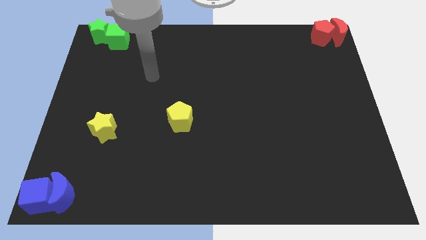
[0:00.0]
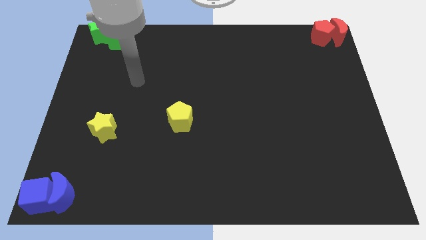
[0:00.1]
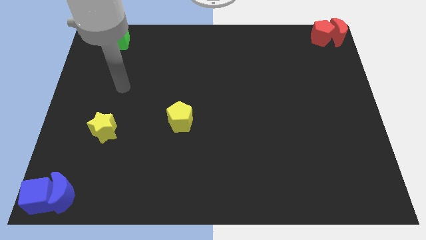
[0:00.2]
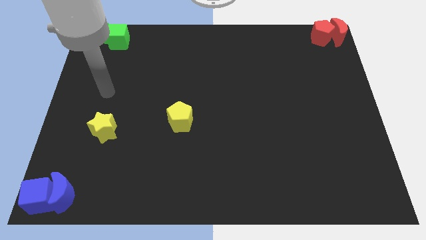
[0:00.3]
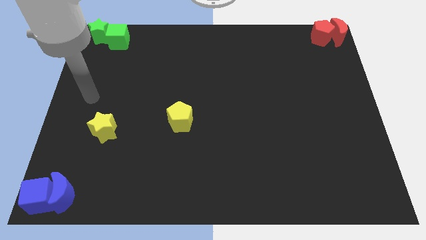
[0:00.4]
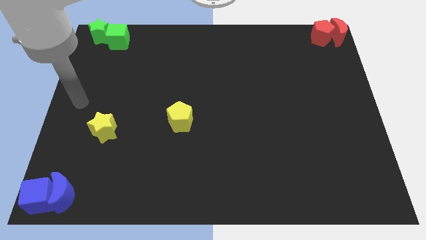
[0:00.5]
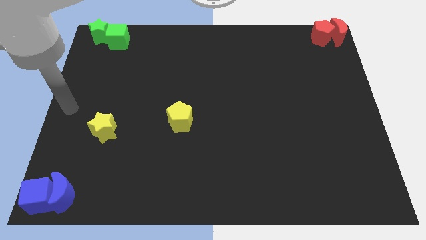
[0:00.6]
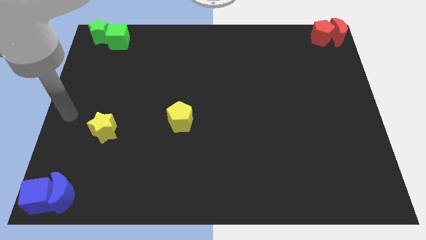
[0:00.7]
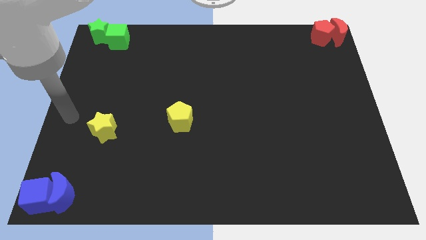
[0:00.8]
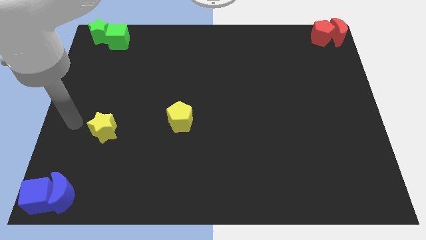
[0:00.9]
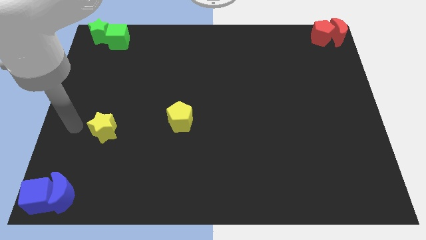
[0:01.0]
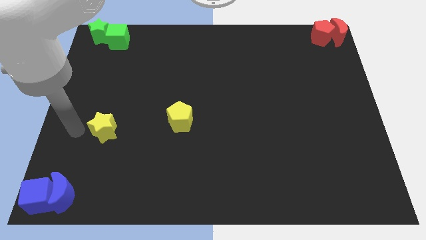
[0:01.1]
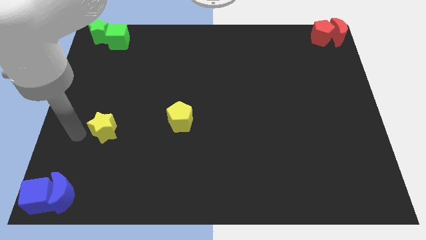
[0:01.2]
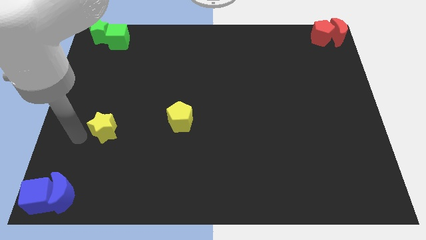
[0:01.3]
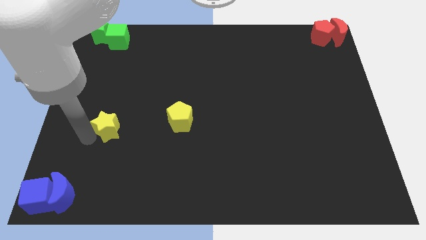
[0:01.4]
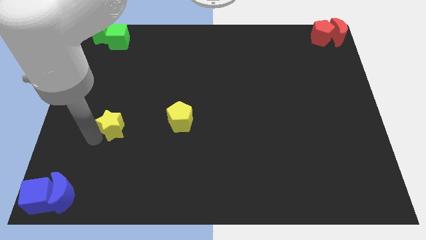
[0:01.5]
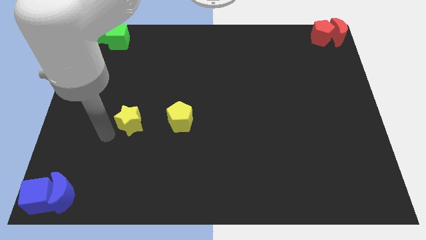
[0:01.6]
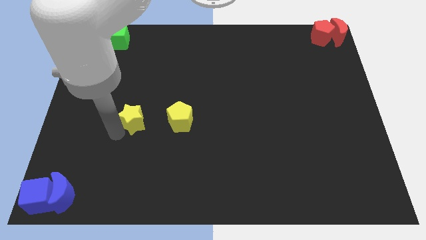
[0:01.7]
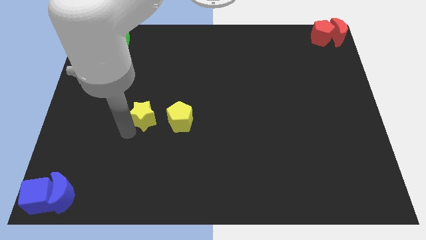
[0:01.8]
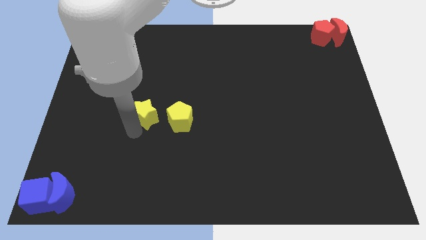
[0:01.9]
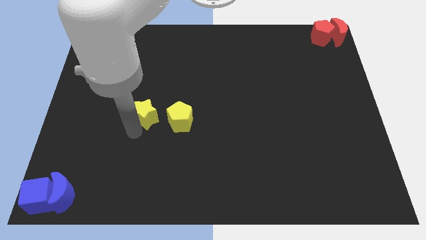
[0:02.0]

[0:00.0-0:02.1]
move the yellow star to the left of the yellow pentagon

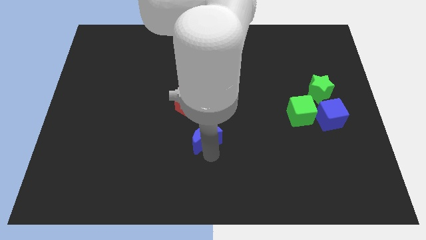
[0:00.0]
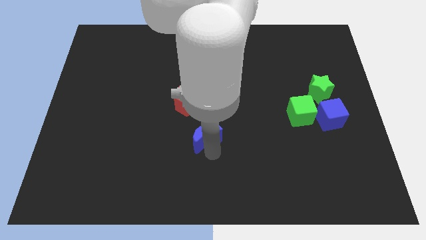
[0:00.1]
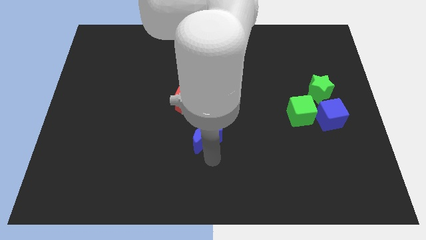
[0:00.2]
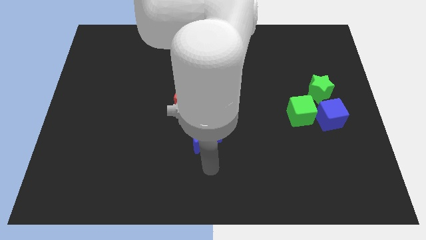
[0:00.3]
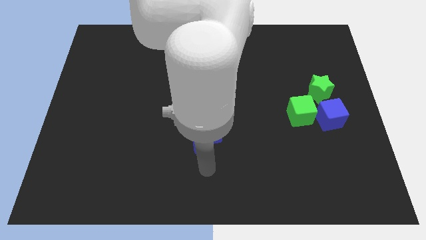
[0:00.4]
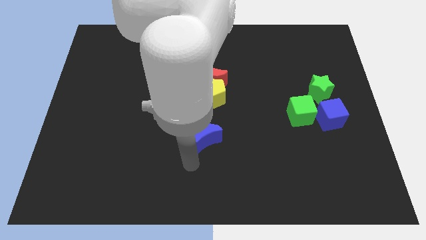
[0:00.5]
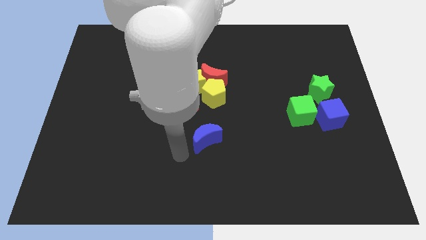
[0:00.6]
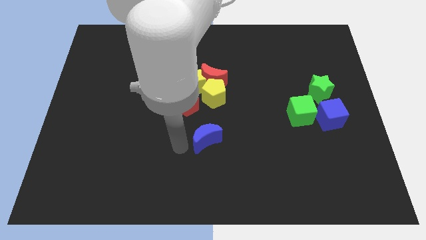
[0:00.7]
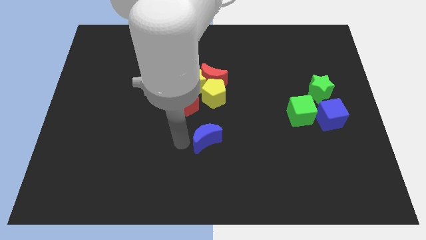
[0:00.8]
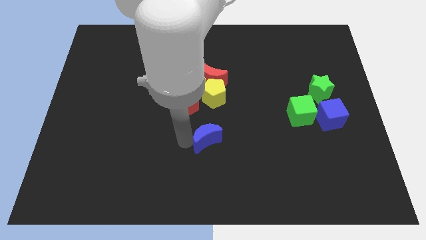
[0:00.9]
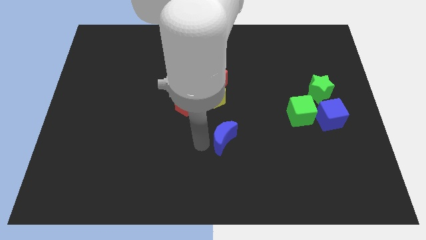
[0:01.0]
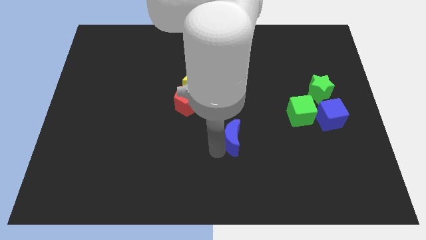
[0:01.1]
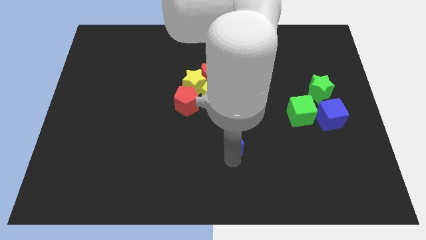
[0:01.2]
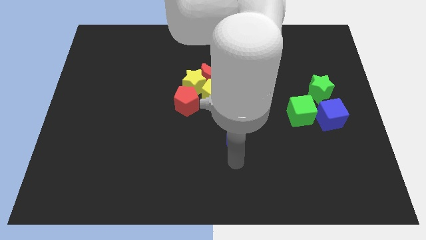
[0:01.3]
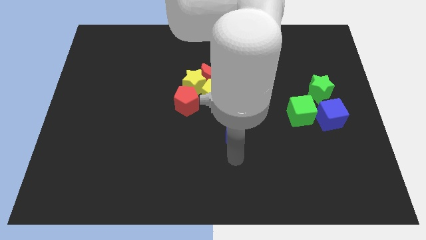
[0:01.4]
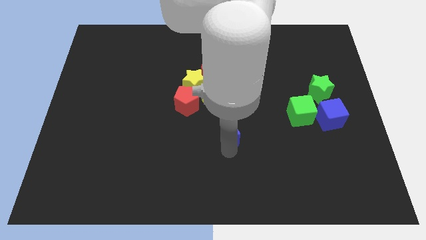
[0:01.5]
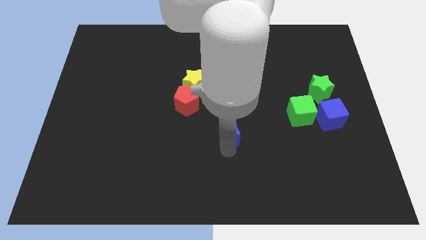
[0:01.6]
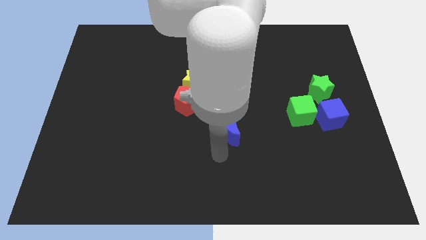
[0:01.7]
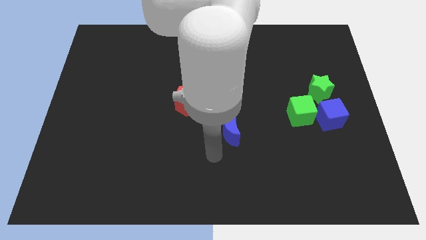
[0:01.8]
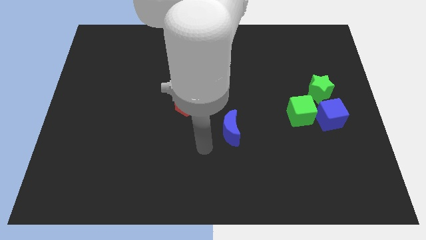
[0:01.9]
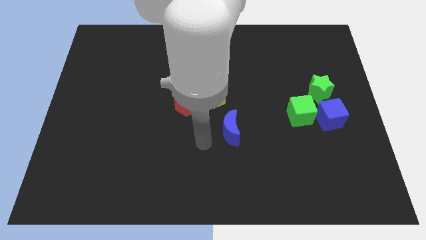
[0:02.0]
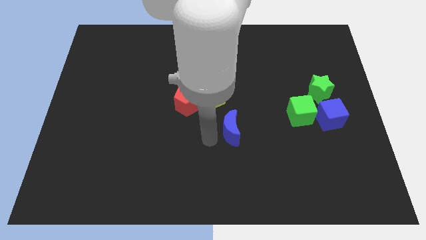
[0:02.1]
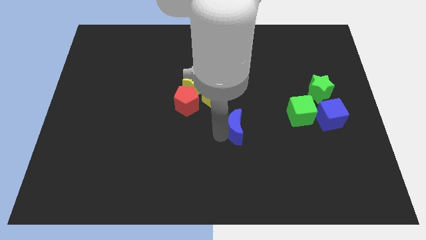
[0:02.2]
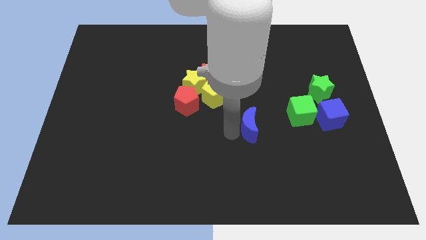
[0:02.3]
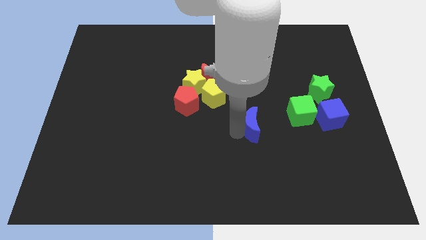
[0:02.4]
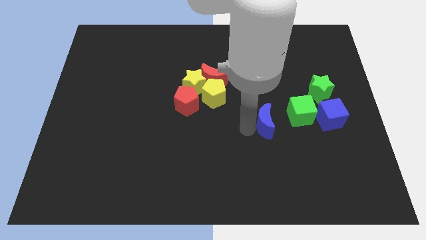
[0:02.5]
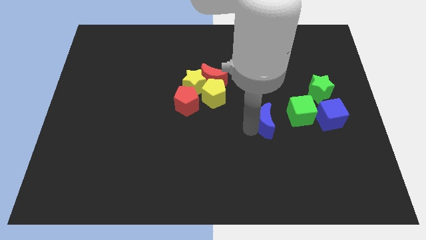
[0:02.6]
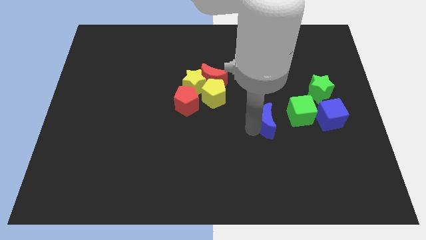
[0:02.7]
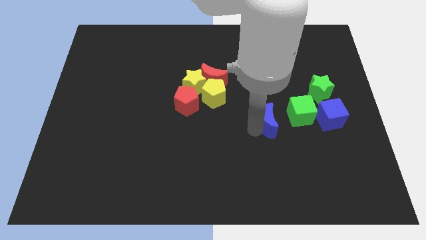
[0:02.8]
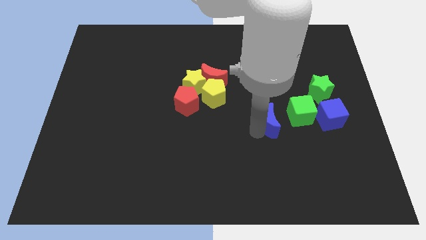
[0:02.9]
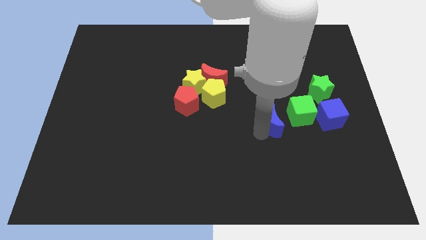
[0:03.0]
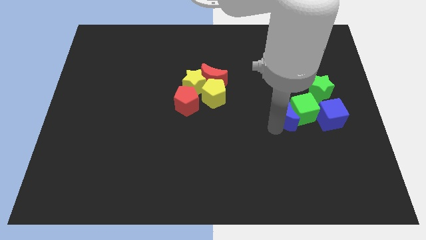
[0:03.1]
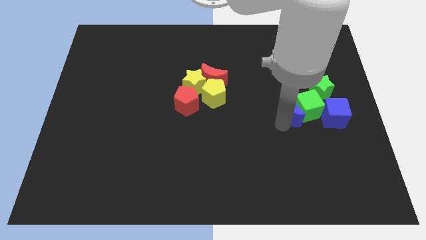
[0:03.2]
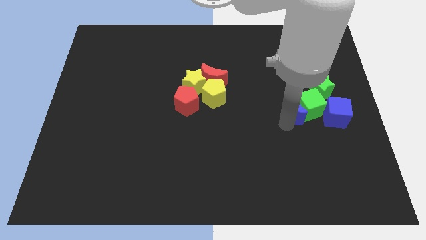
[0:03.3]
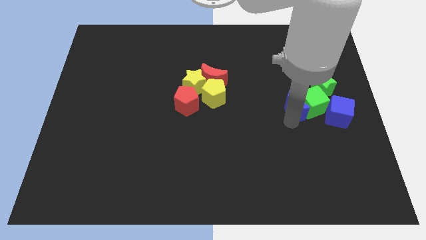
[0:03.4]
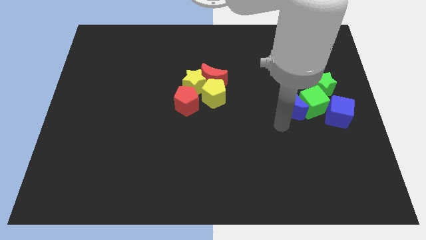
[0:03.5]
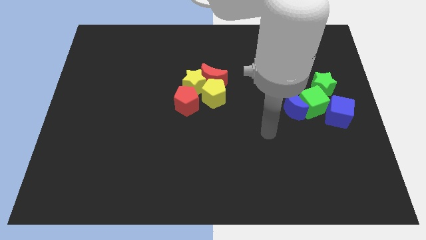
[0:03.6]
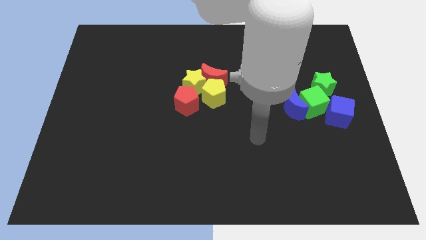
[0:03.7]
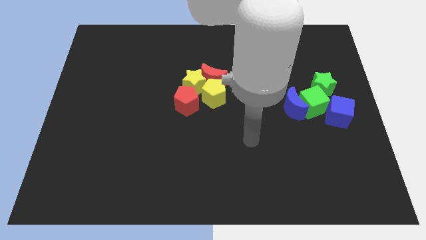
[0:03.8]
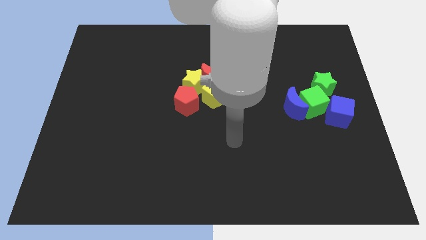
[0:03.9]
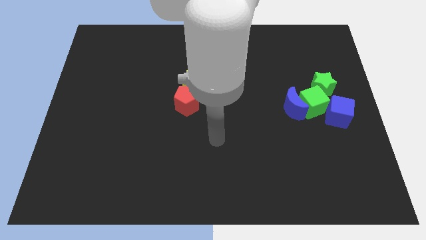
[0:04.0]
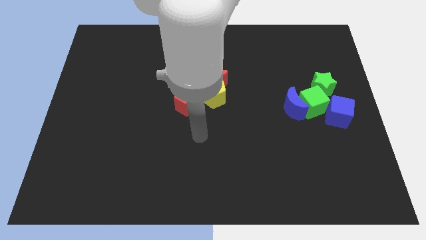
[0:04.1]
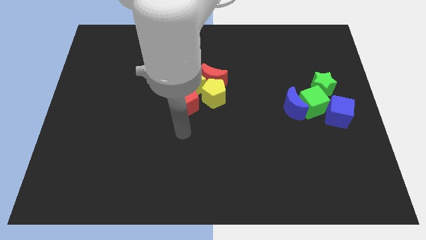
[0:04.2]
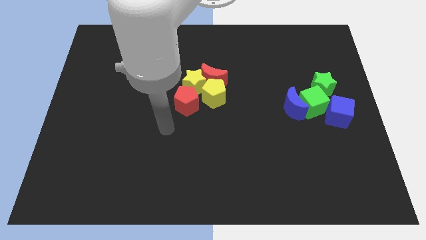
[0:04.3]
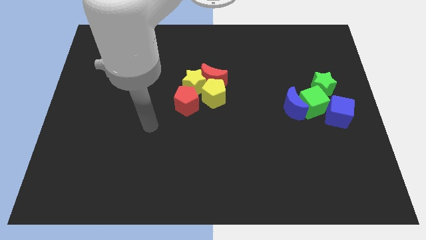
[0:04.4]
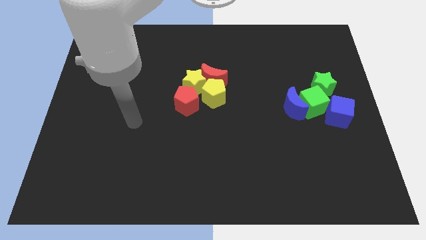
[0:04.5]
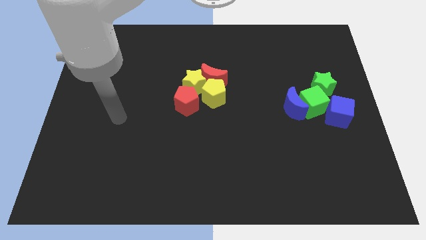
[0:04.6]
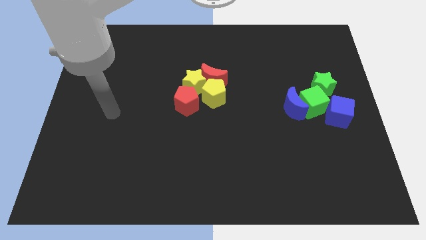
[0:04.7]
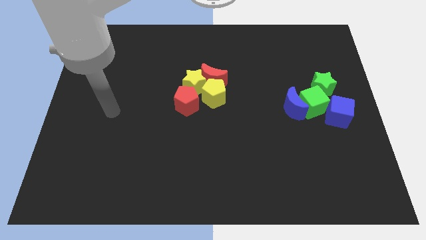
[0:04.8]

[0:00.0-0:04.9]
move the blue crescent towards the green cube

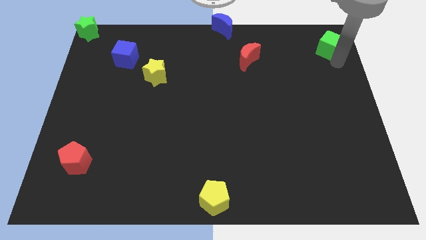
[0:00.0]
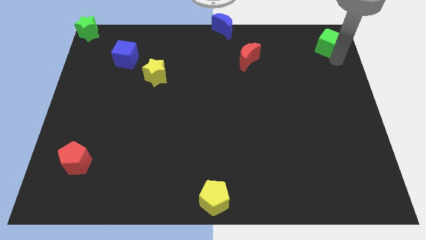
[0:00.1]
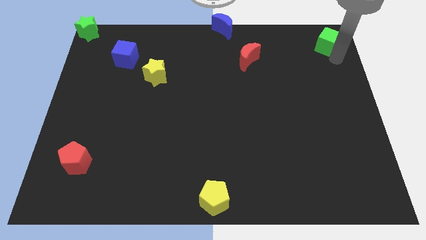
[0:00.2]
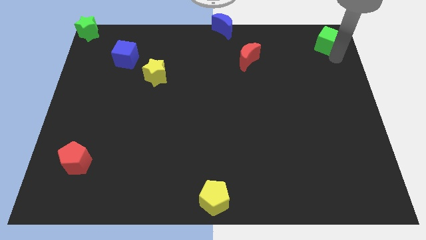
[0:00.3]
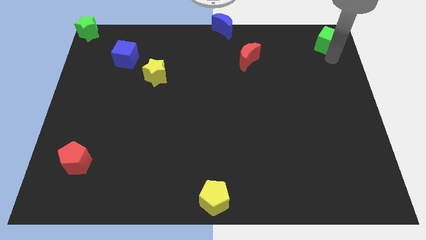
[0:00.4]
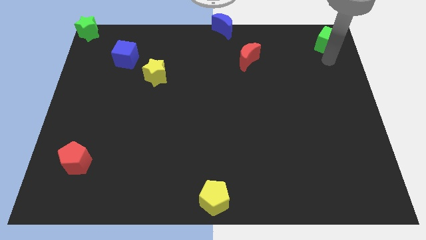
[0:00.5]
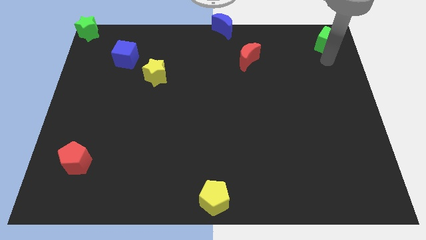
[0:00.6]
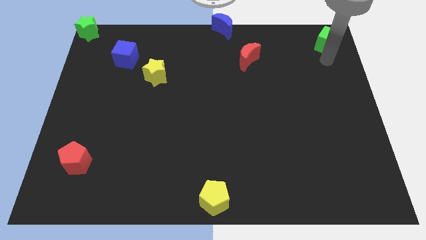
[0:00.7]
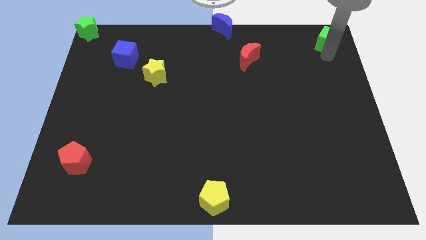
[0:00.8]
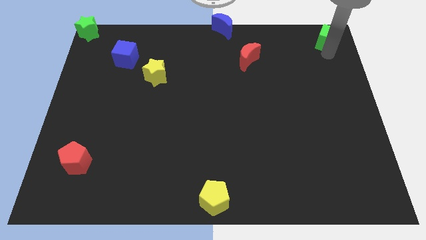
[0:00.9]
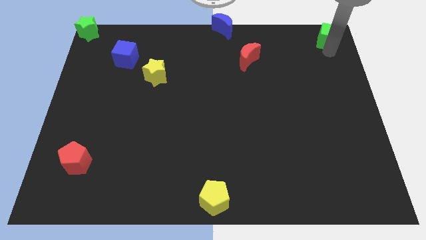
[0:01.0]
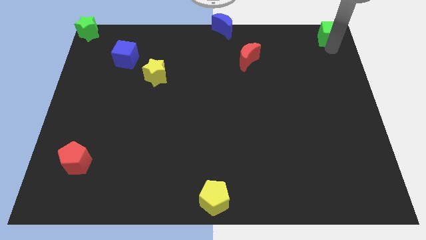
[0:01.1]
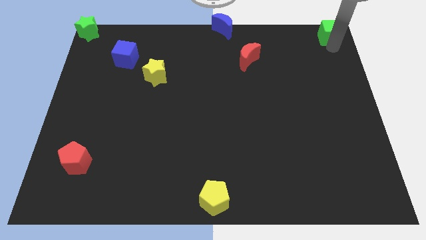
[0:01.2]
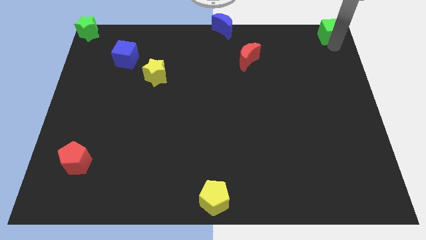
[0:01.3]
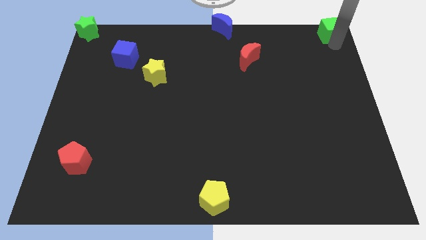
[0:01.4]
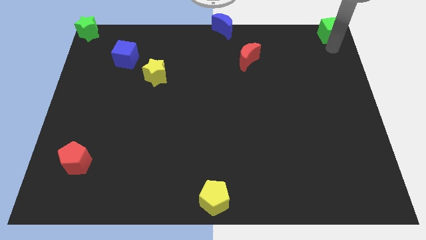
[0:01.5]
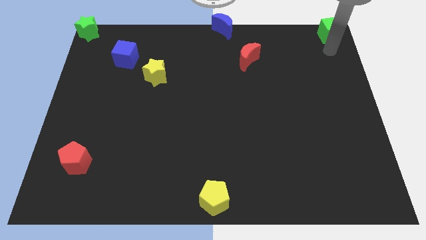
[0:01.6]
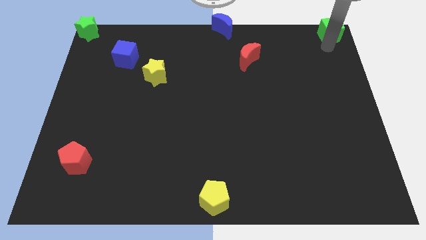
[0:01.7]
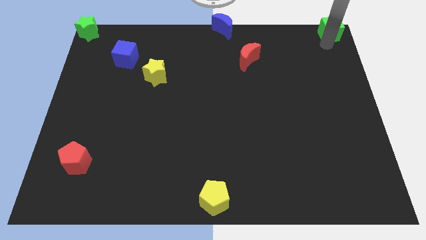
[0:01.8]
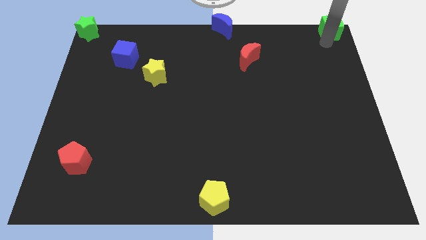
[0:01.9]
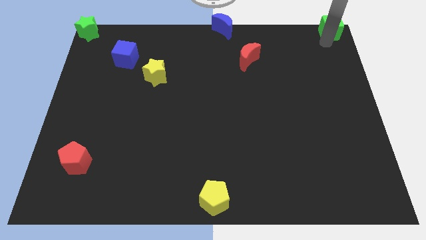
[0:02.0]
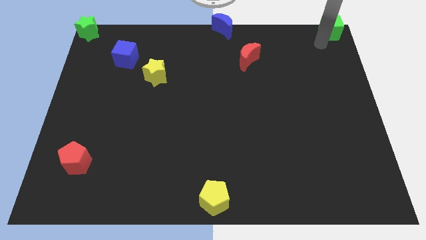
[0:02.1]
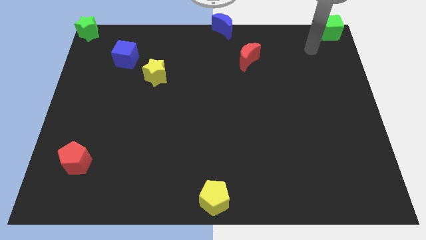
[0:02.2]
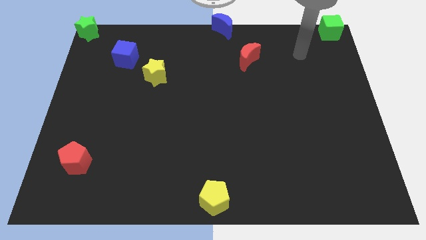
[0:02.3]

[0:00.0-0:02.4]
push the green cube to the top right corner
